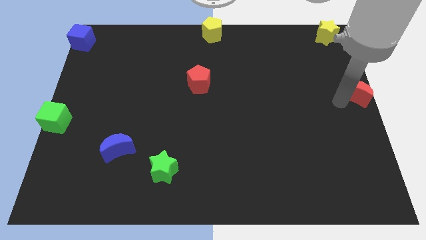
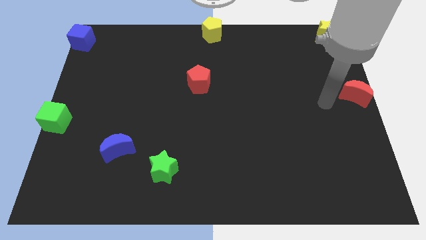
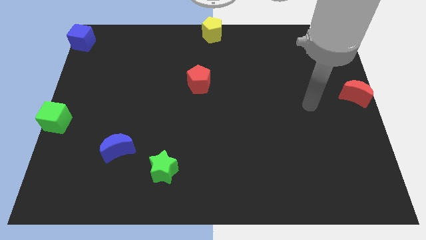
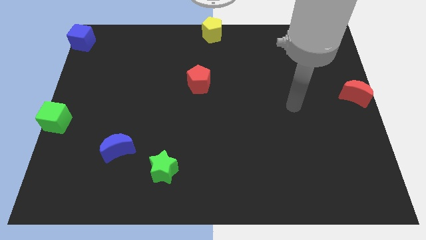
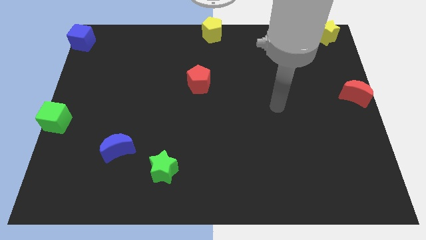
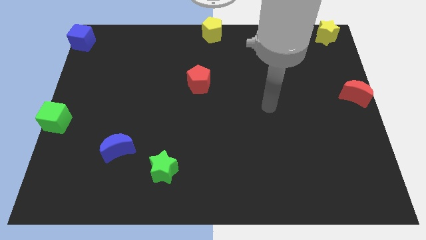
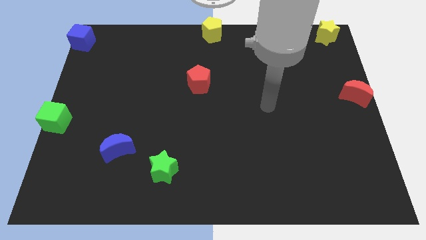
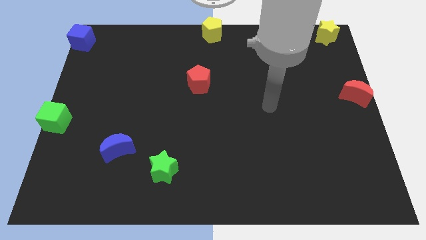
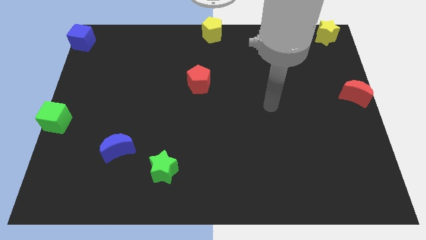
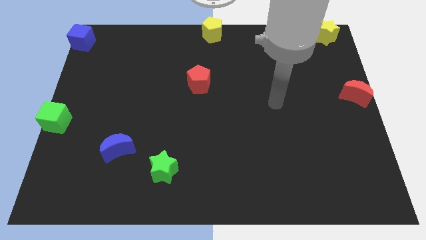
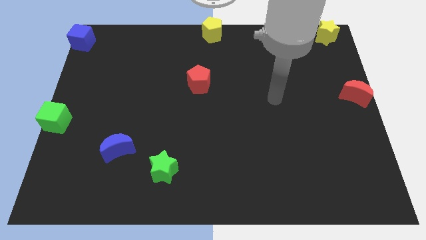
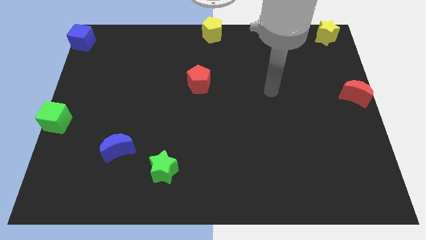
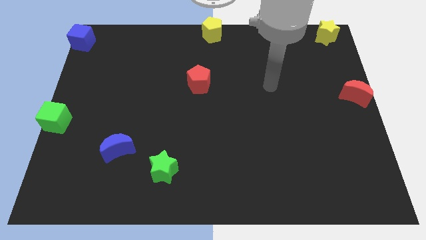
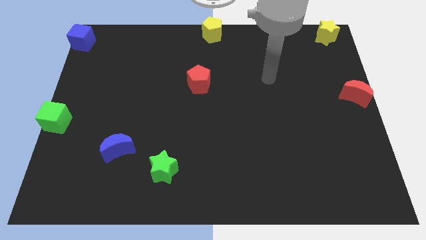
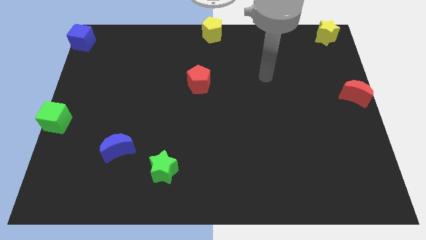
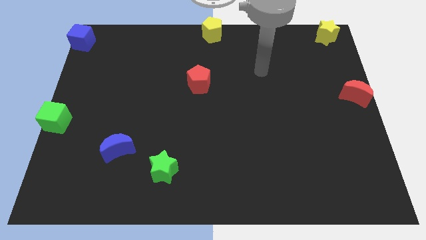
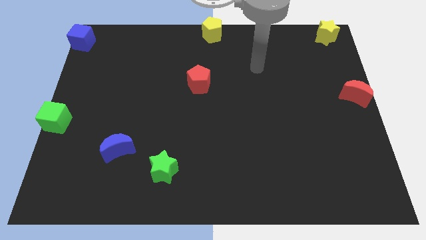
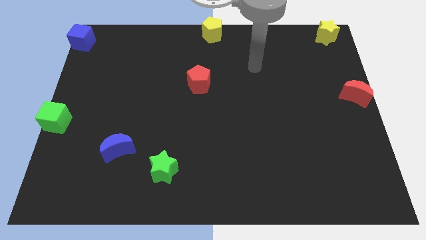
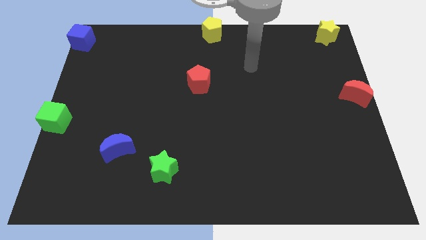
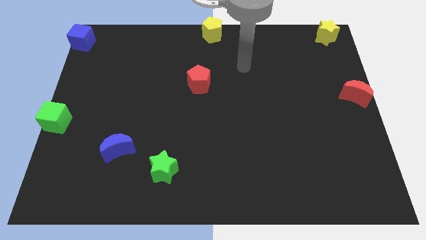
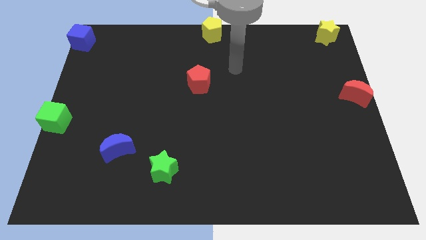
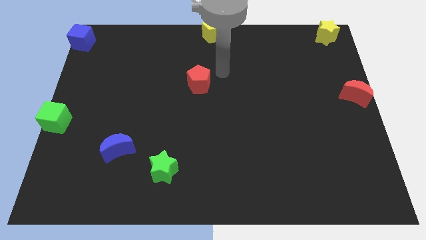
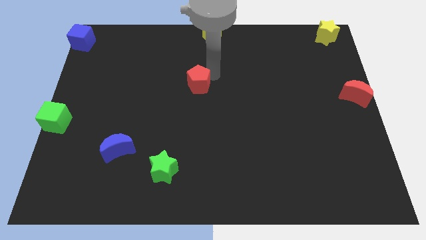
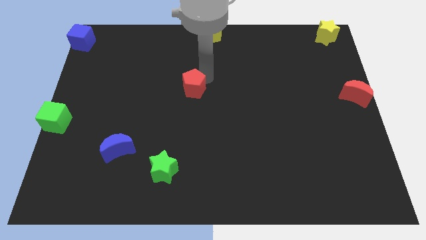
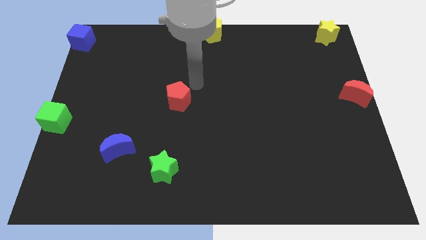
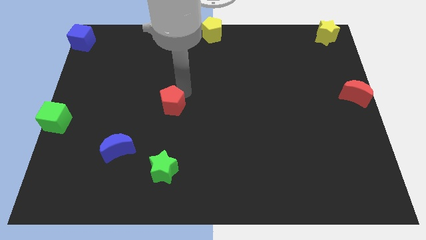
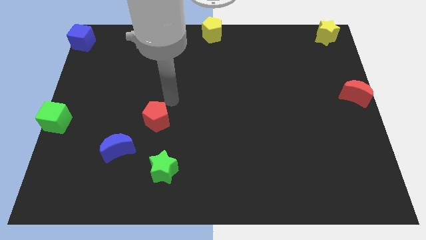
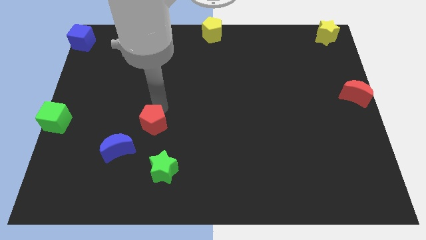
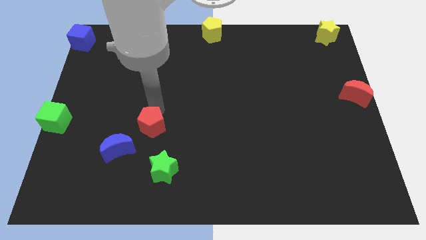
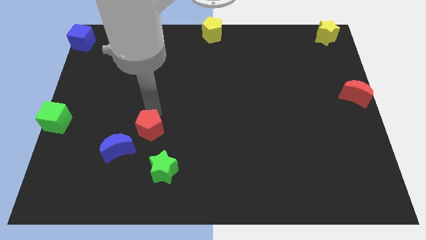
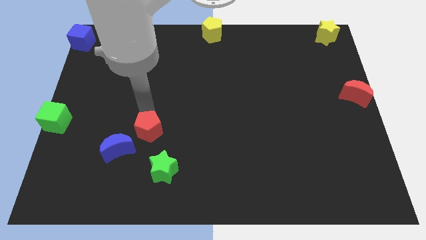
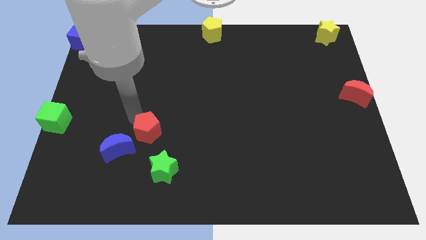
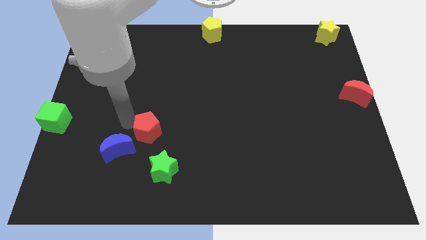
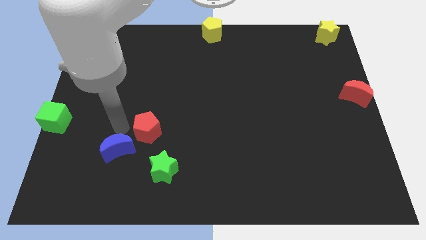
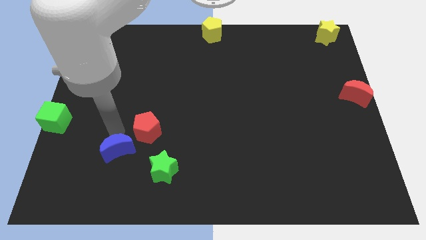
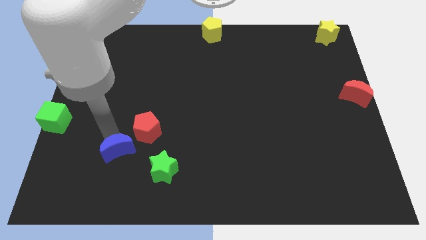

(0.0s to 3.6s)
place the red pentagon to the top right of blue crescent

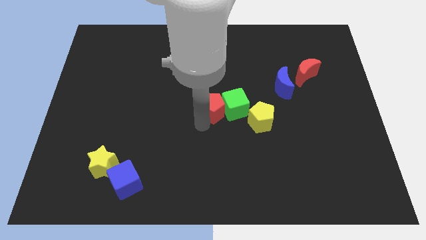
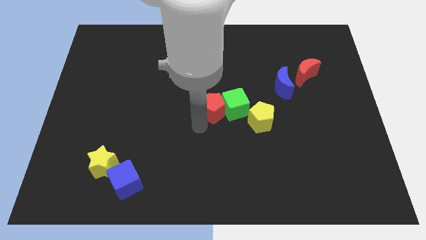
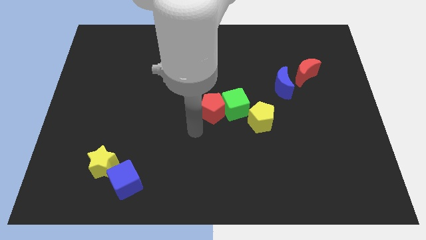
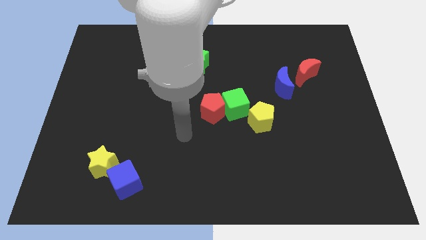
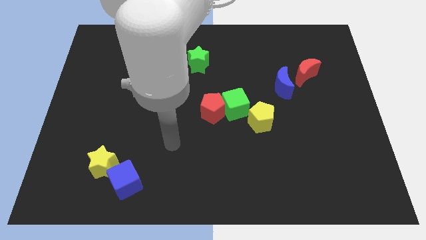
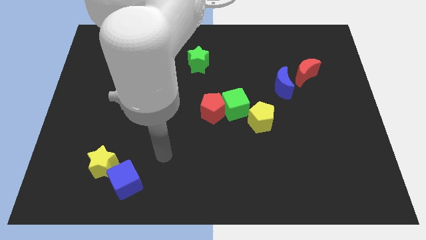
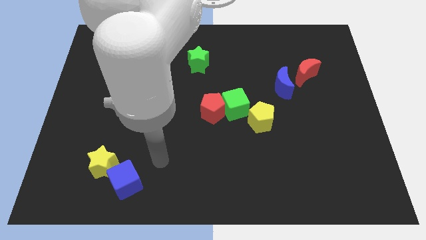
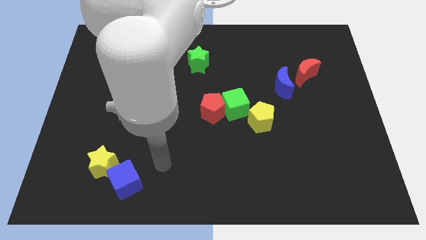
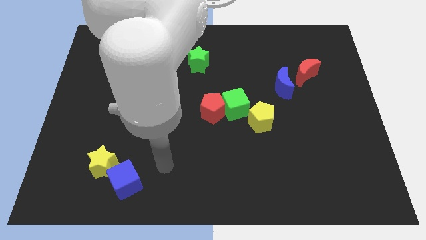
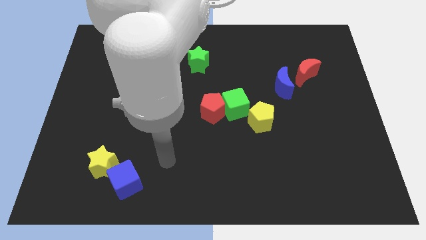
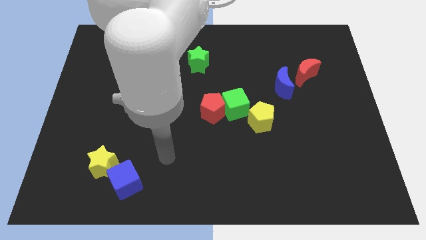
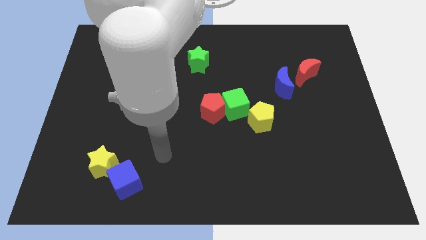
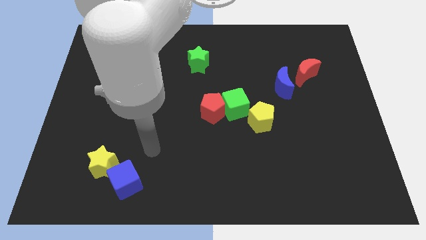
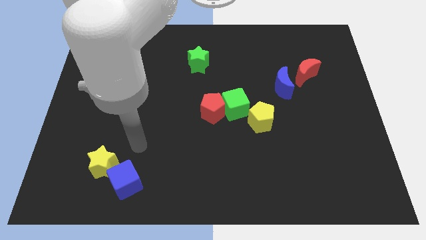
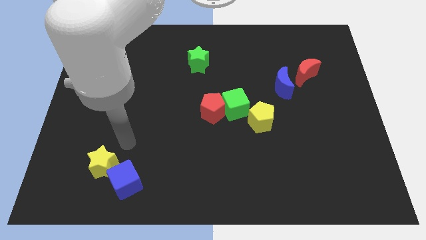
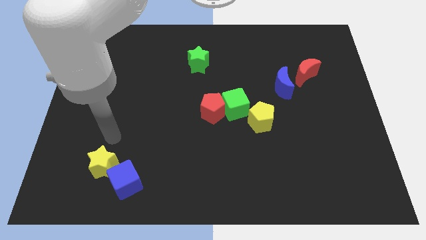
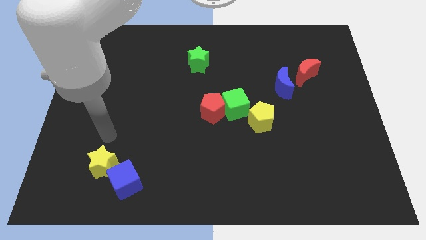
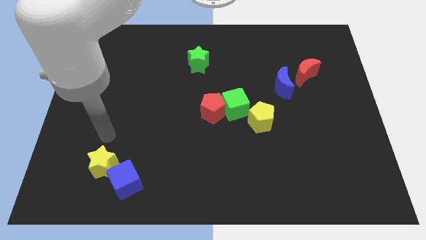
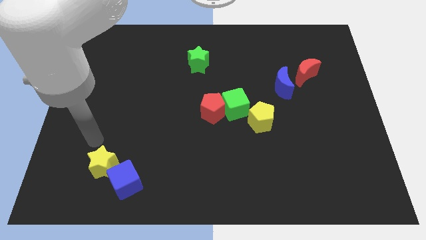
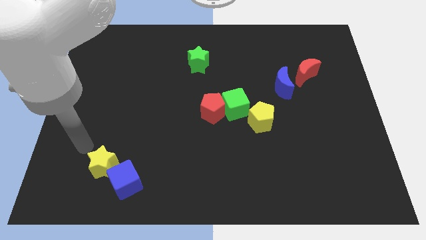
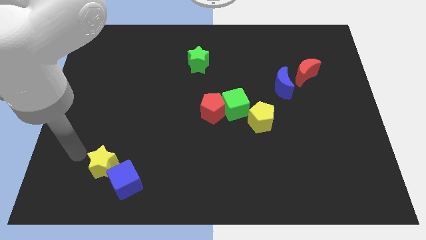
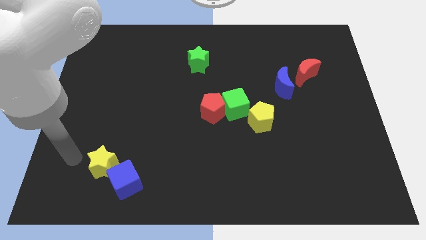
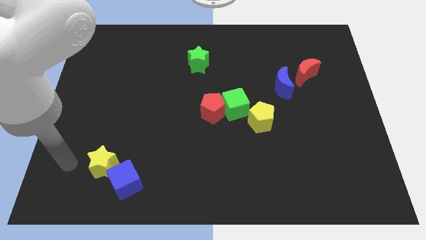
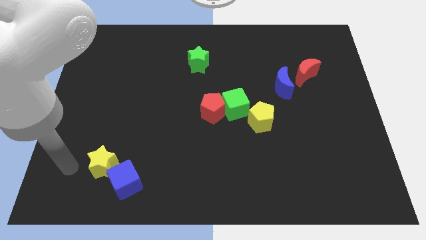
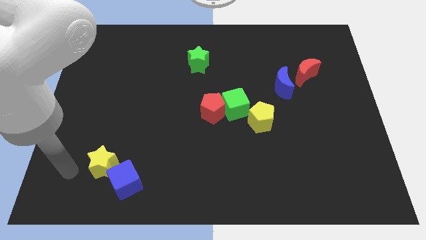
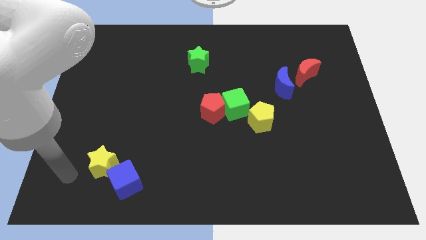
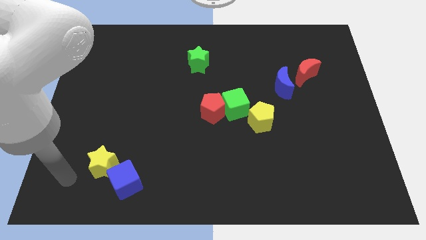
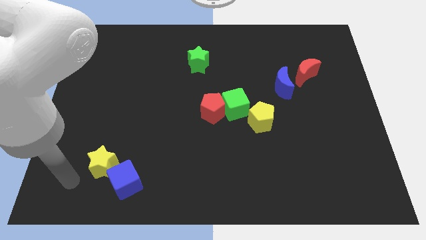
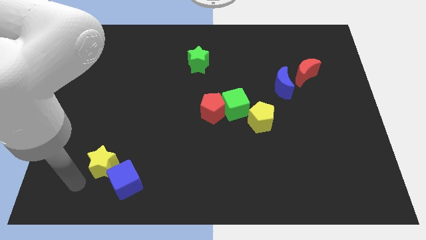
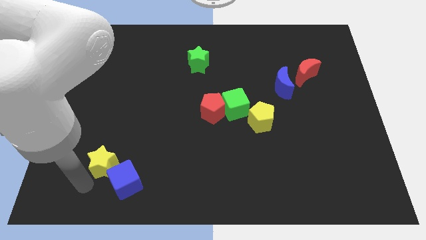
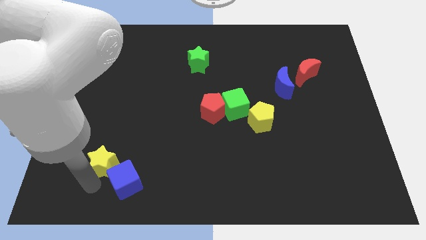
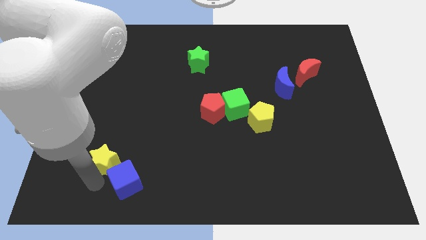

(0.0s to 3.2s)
point your arm at the bottom of the yellow star

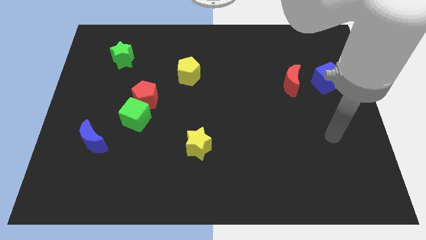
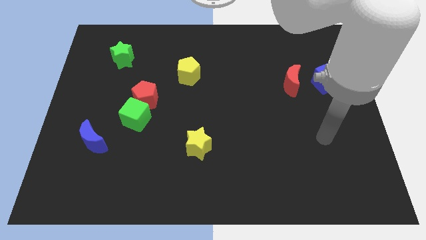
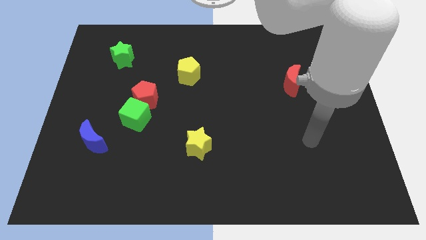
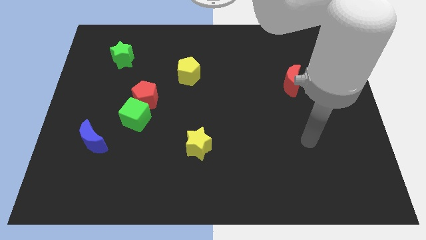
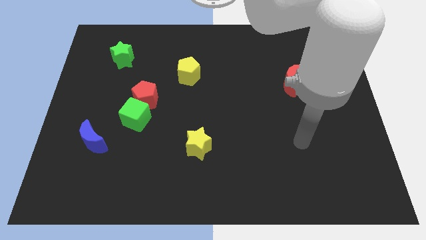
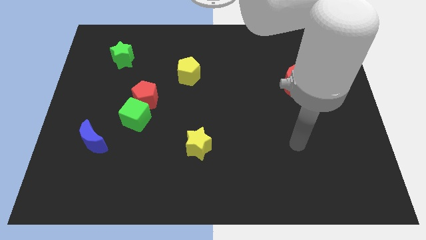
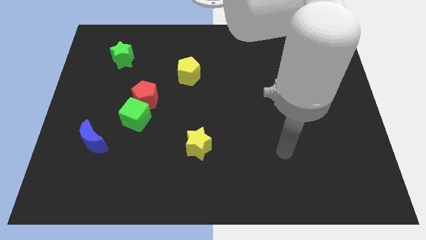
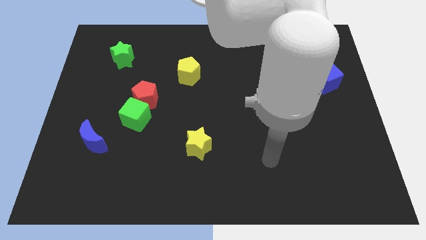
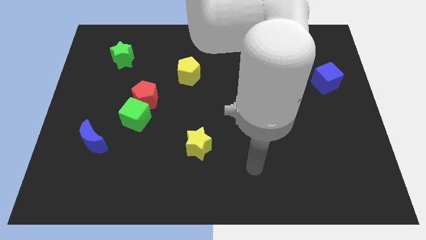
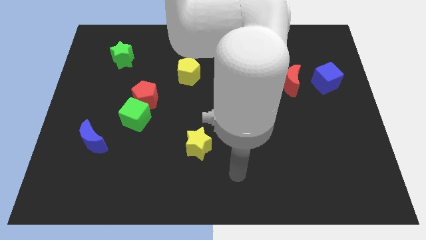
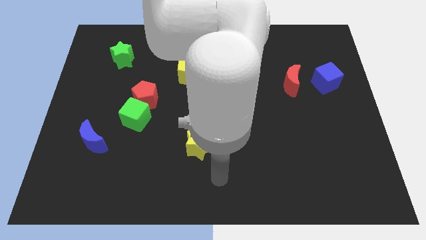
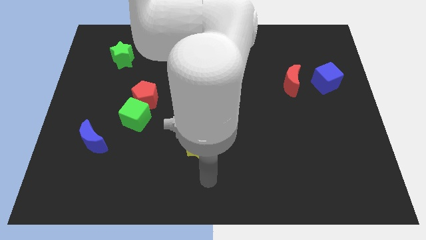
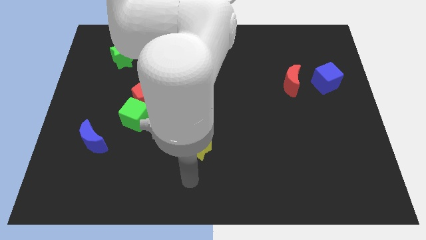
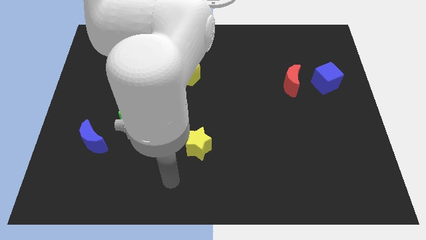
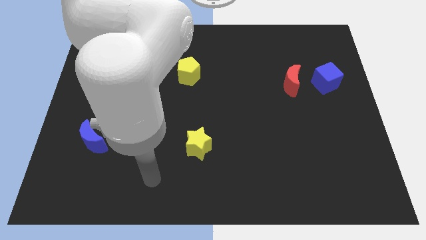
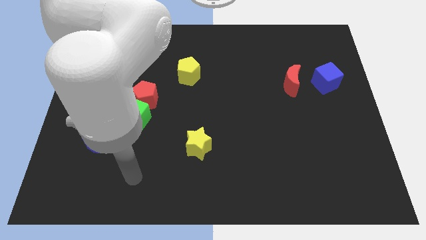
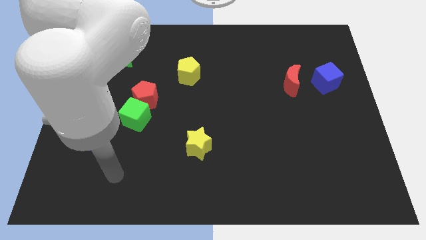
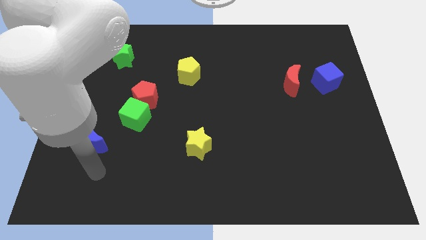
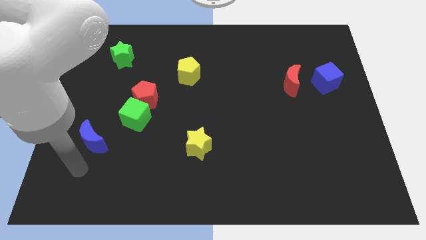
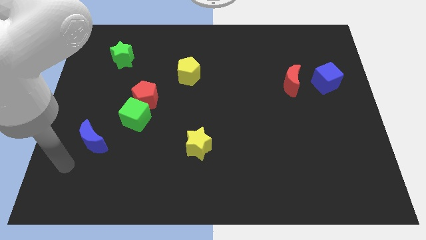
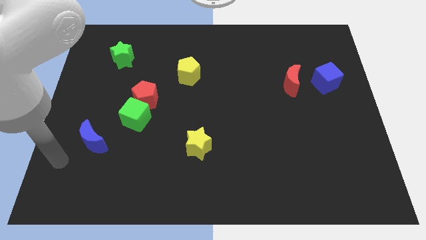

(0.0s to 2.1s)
move your arm diagonally below the blue moon

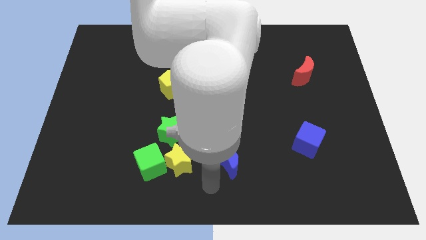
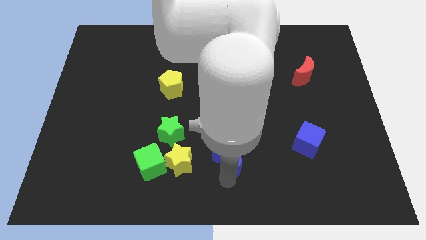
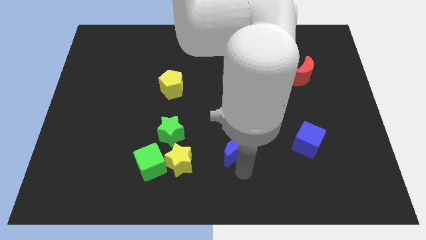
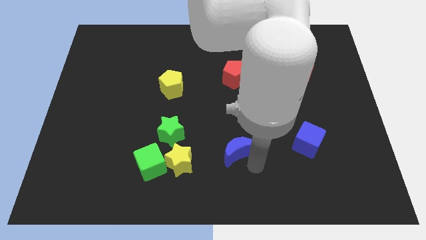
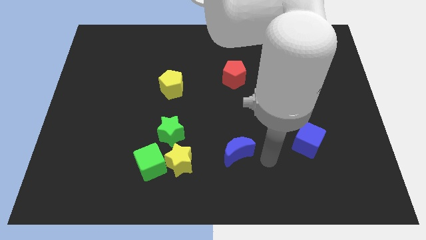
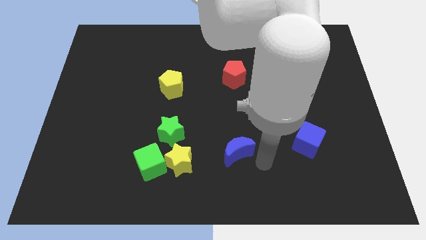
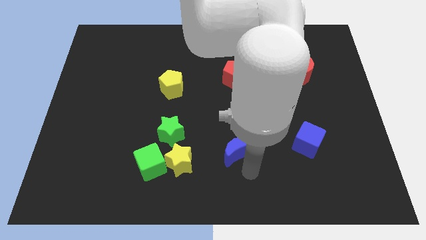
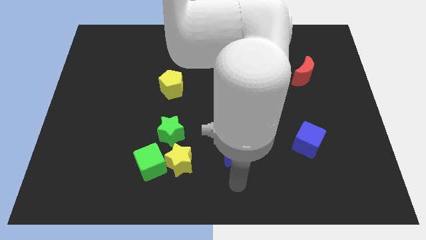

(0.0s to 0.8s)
place your hand below the blue moon
